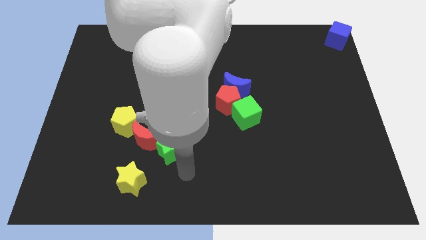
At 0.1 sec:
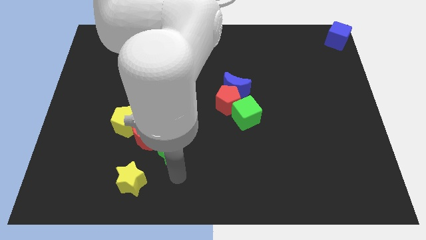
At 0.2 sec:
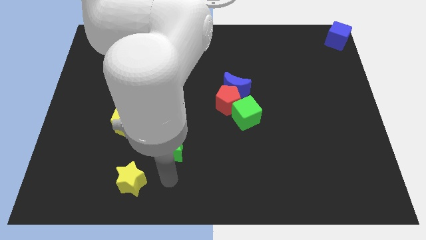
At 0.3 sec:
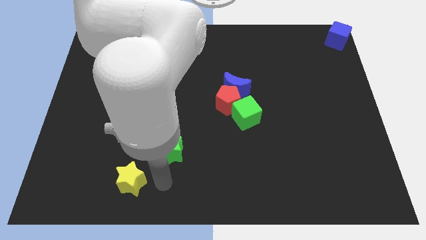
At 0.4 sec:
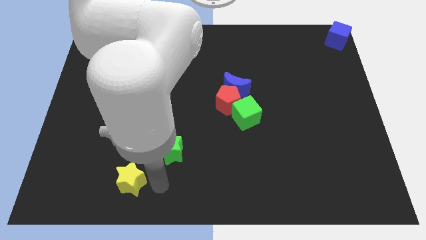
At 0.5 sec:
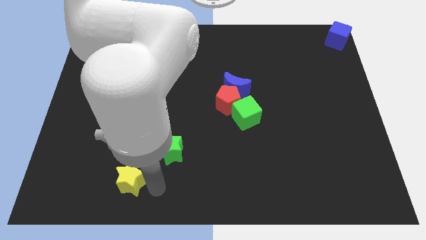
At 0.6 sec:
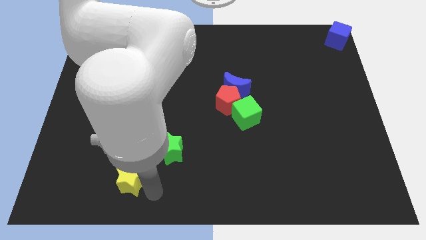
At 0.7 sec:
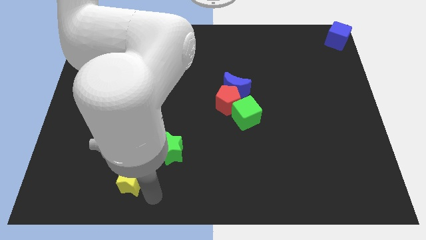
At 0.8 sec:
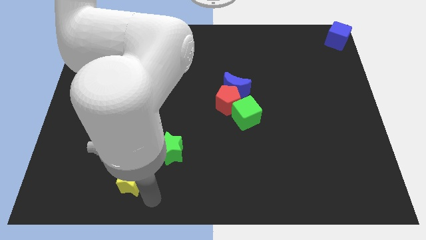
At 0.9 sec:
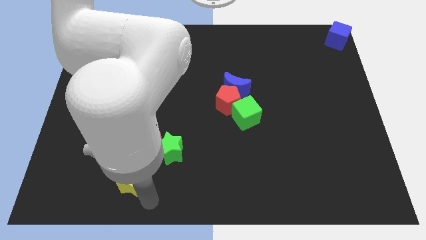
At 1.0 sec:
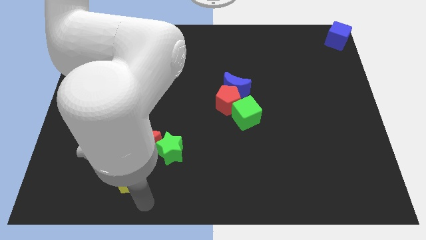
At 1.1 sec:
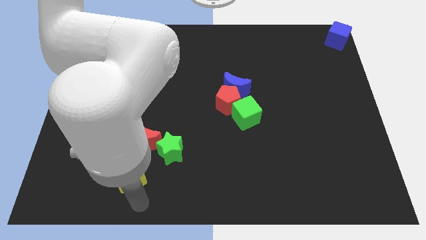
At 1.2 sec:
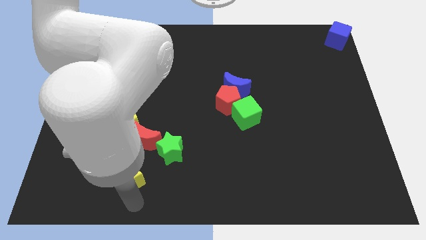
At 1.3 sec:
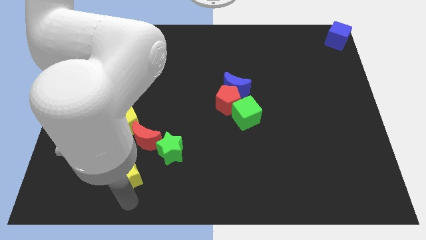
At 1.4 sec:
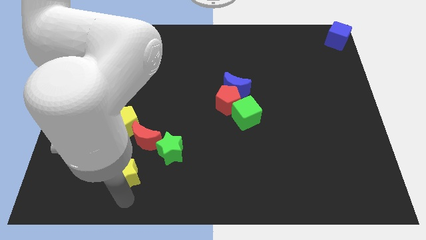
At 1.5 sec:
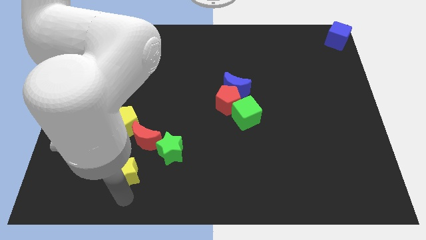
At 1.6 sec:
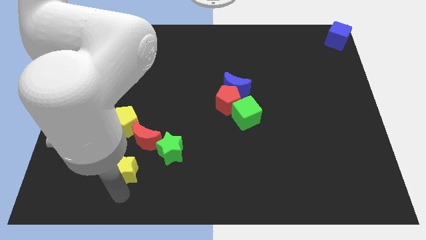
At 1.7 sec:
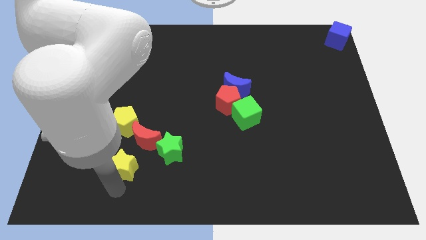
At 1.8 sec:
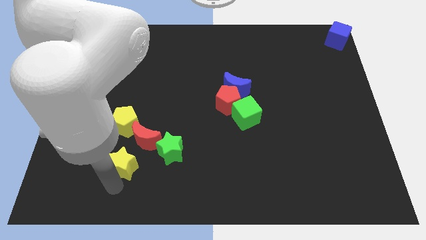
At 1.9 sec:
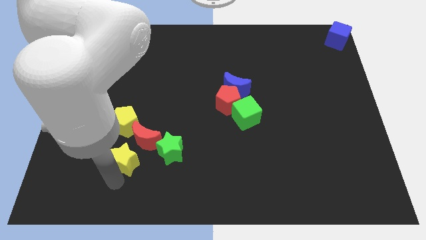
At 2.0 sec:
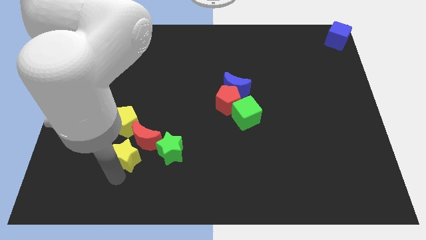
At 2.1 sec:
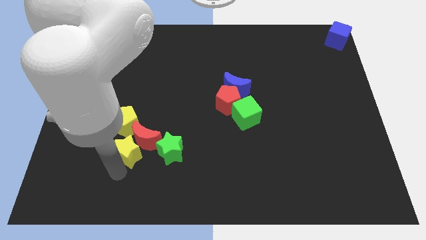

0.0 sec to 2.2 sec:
place the yellow star diagonally to the red crescent

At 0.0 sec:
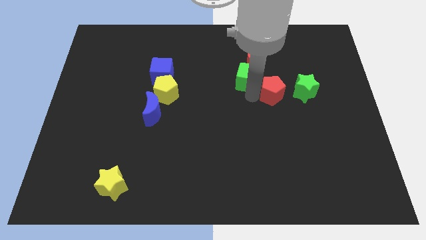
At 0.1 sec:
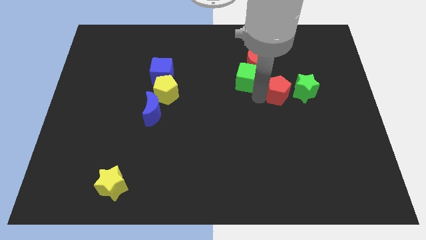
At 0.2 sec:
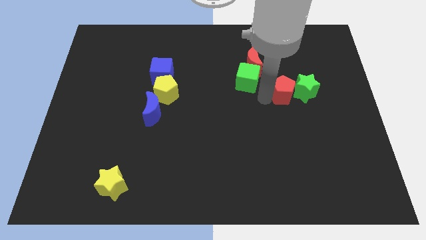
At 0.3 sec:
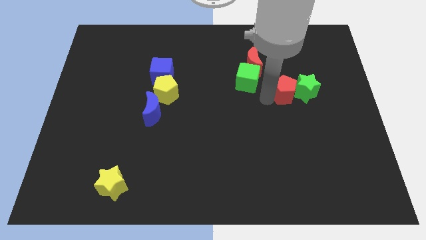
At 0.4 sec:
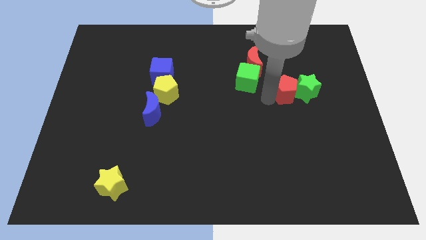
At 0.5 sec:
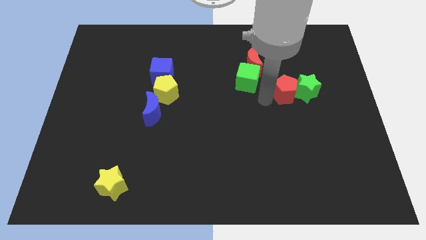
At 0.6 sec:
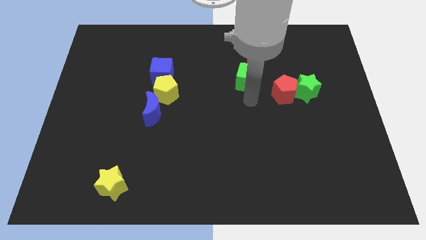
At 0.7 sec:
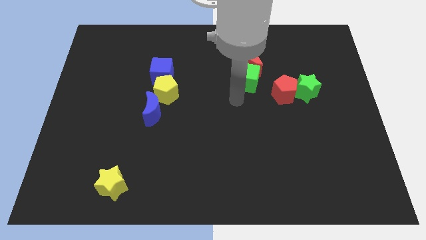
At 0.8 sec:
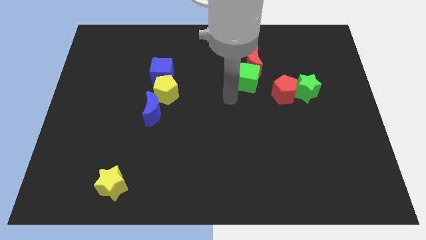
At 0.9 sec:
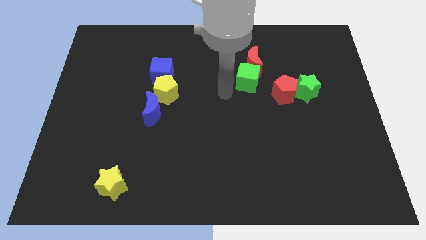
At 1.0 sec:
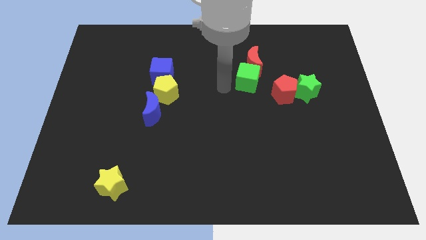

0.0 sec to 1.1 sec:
slide red pentagon into green star

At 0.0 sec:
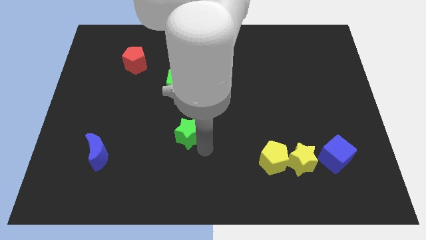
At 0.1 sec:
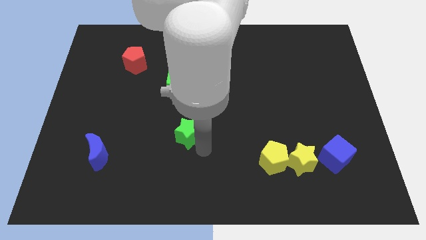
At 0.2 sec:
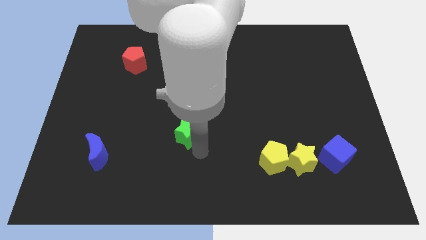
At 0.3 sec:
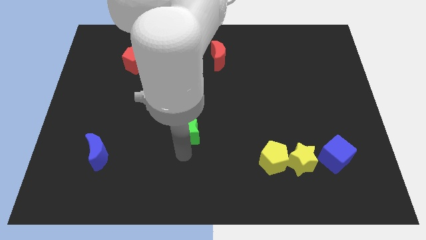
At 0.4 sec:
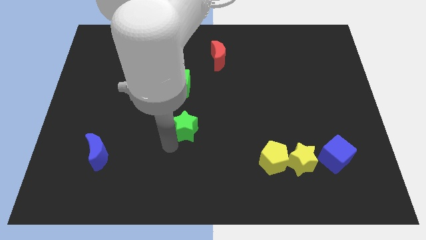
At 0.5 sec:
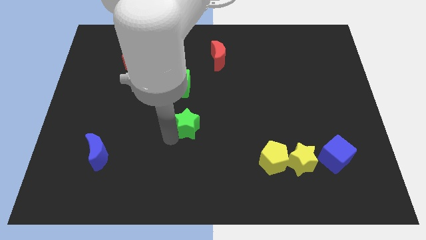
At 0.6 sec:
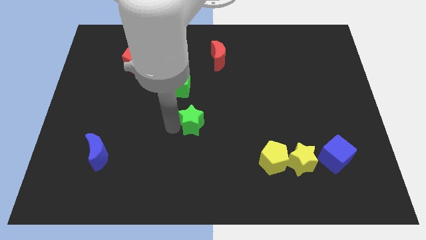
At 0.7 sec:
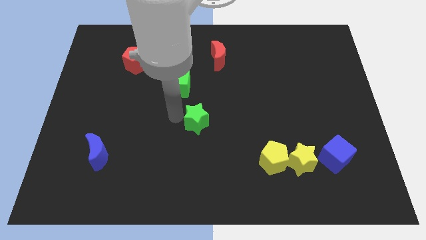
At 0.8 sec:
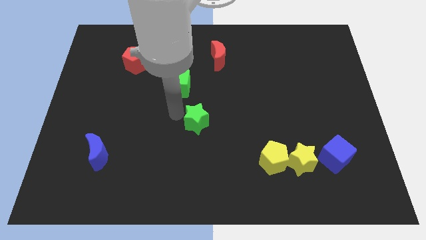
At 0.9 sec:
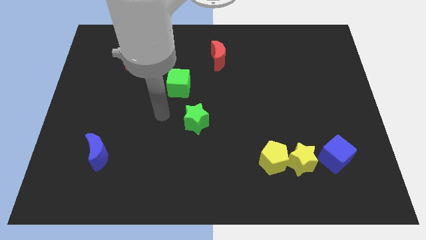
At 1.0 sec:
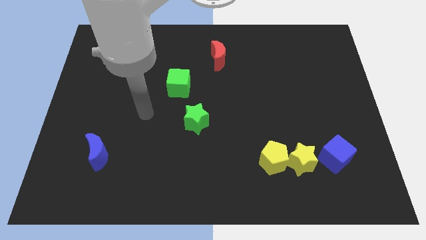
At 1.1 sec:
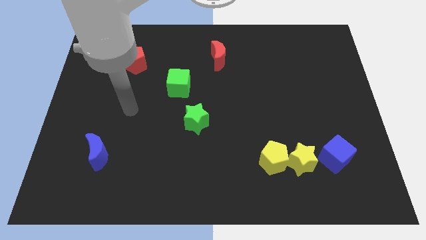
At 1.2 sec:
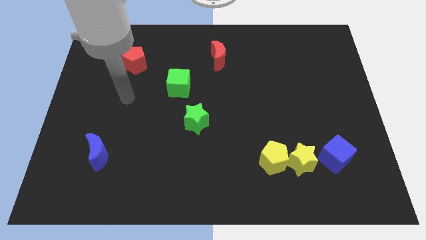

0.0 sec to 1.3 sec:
move the green star to the center

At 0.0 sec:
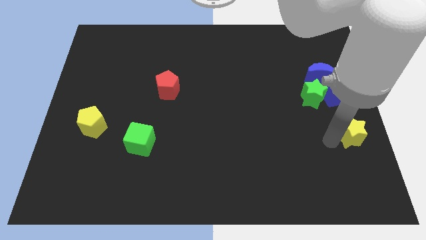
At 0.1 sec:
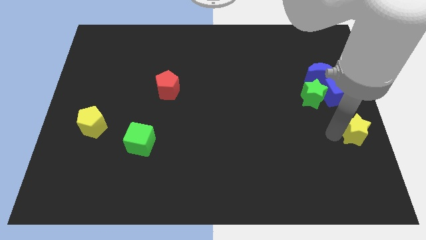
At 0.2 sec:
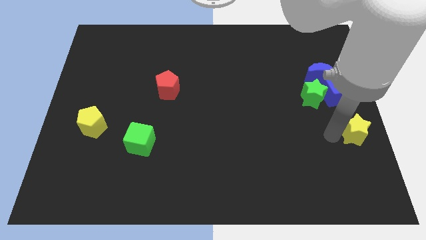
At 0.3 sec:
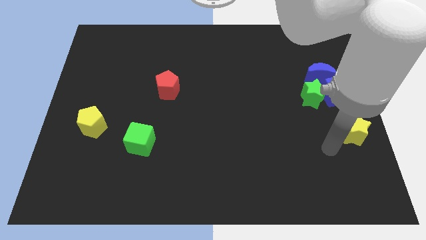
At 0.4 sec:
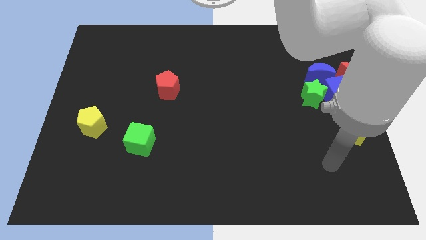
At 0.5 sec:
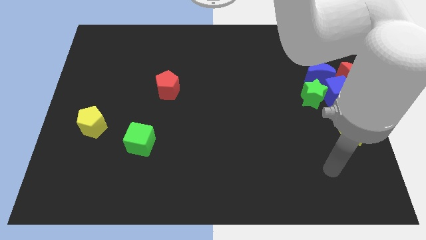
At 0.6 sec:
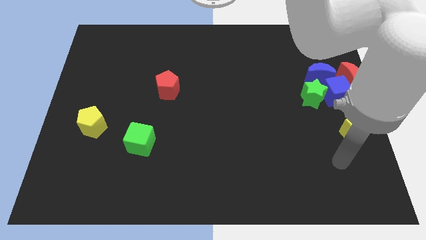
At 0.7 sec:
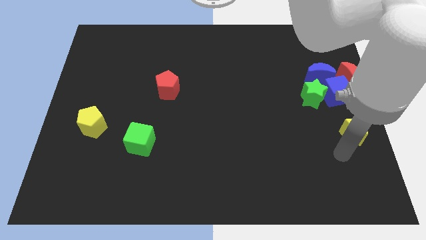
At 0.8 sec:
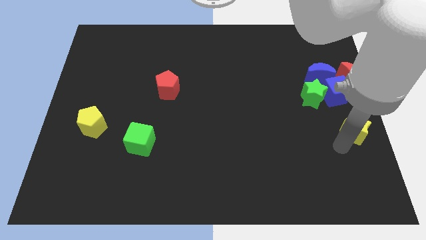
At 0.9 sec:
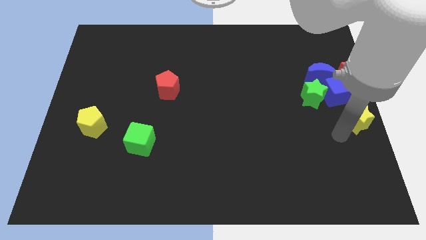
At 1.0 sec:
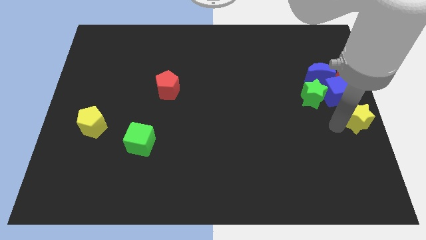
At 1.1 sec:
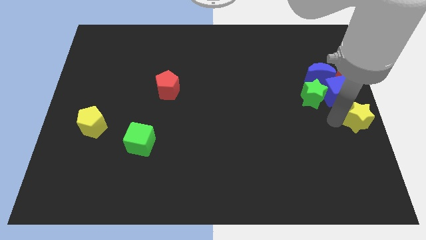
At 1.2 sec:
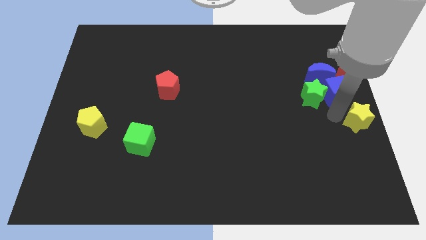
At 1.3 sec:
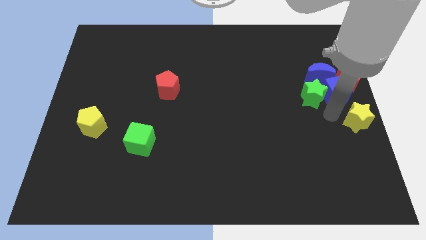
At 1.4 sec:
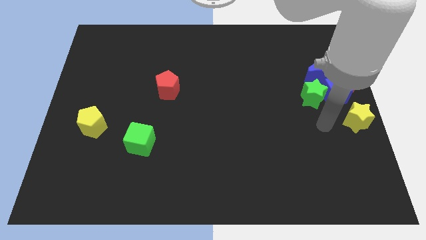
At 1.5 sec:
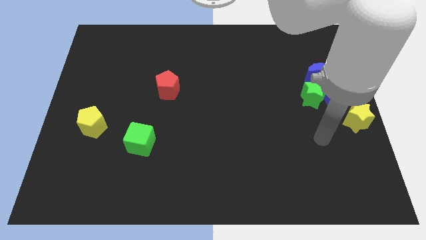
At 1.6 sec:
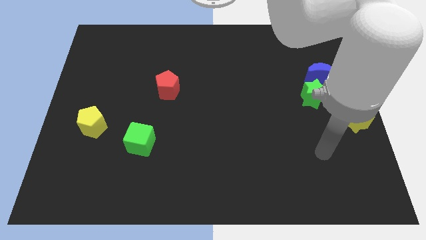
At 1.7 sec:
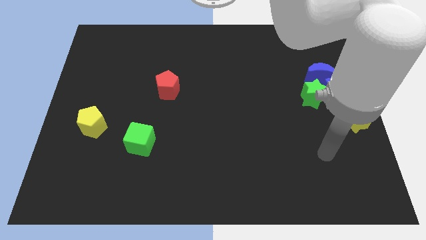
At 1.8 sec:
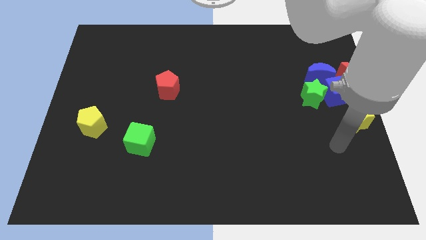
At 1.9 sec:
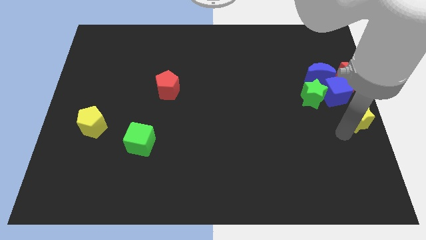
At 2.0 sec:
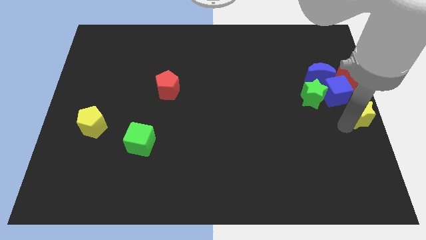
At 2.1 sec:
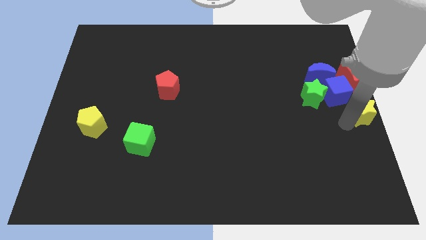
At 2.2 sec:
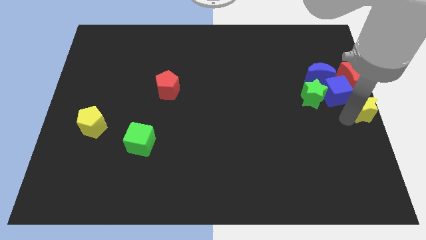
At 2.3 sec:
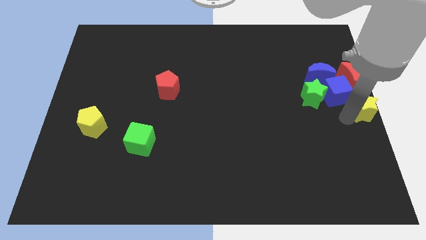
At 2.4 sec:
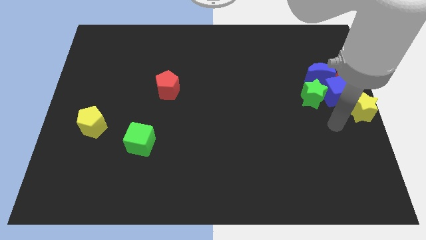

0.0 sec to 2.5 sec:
place the yellow star at the center right of the board

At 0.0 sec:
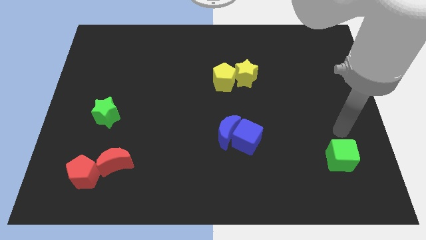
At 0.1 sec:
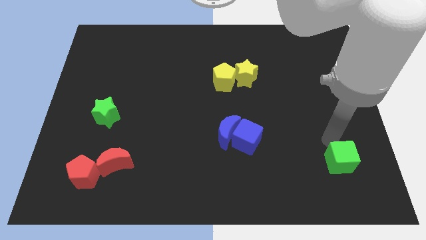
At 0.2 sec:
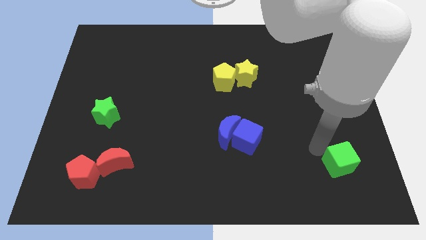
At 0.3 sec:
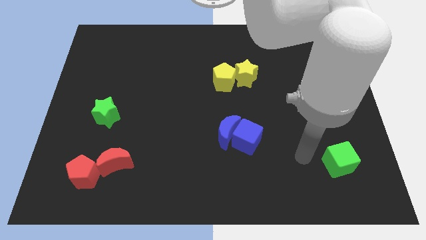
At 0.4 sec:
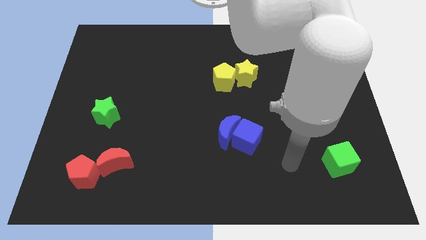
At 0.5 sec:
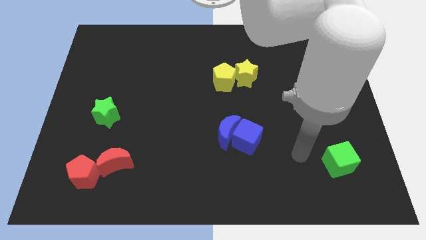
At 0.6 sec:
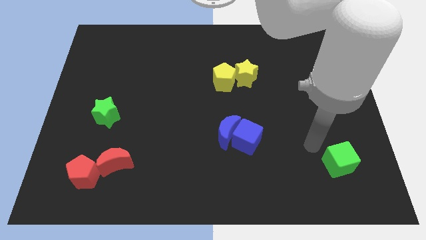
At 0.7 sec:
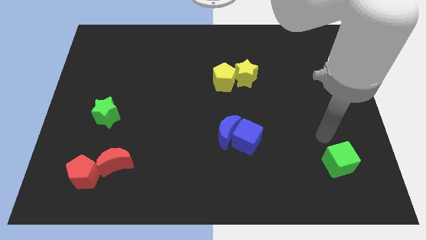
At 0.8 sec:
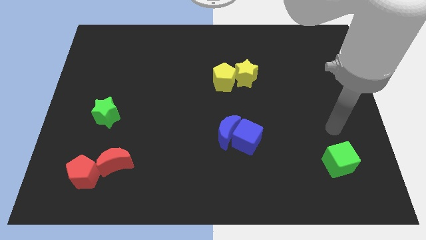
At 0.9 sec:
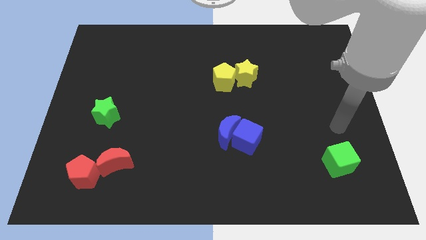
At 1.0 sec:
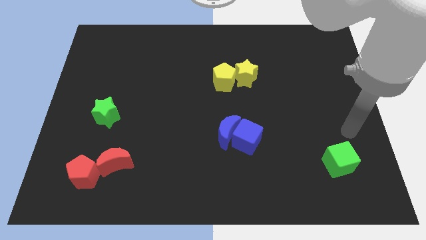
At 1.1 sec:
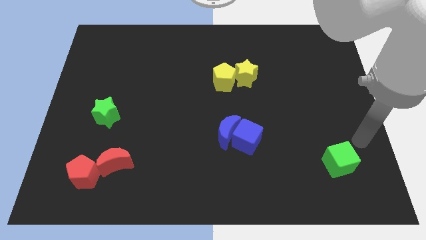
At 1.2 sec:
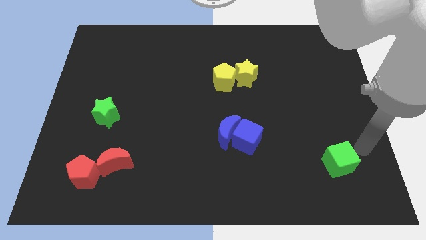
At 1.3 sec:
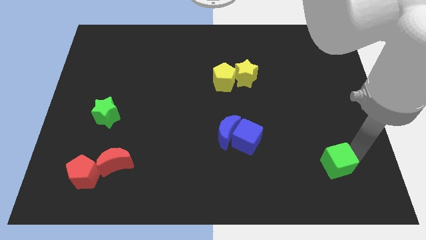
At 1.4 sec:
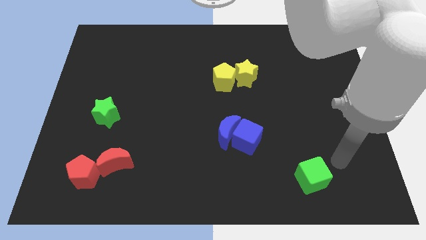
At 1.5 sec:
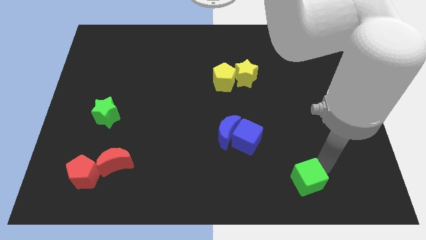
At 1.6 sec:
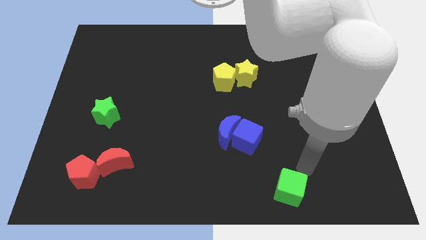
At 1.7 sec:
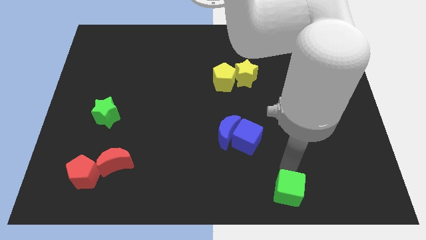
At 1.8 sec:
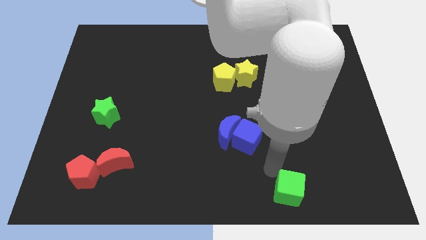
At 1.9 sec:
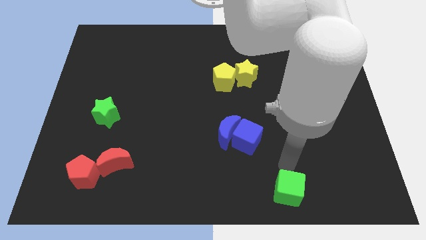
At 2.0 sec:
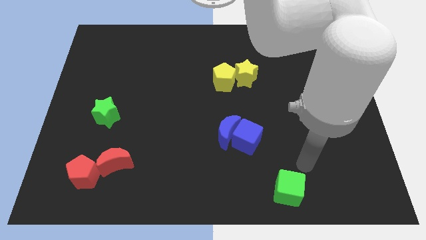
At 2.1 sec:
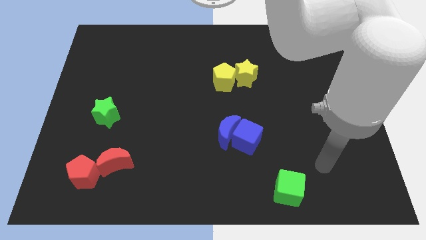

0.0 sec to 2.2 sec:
move the green cube diagonal below blue cube
